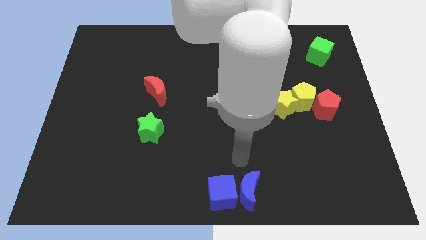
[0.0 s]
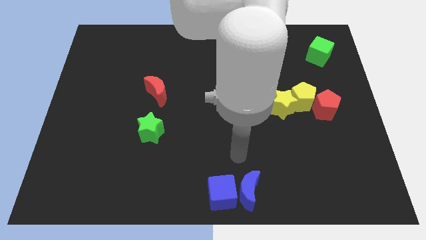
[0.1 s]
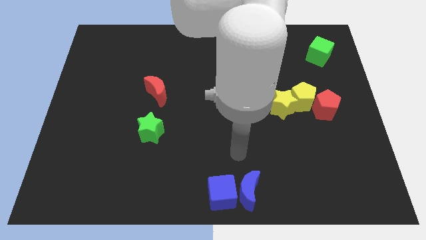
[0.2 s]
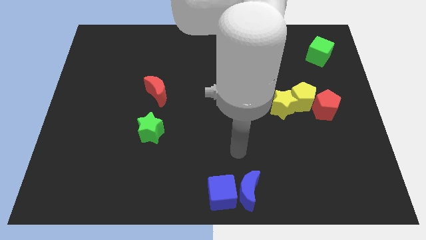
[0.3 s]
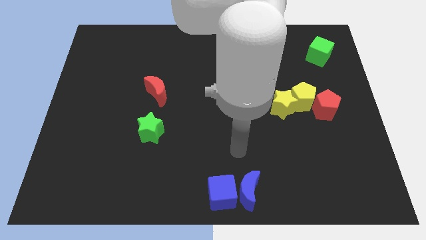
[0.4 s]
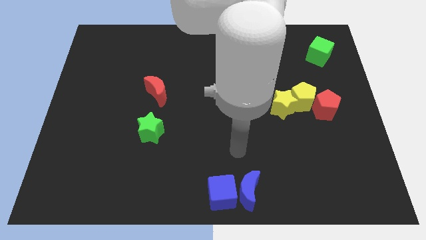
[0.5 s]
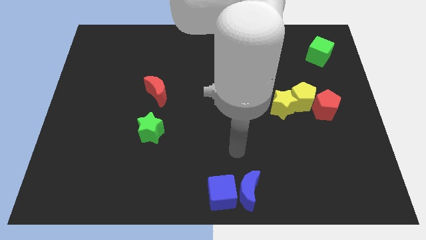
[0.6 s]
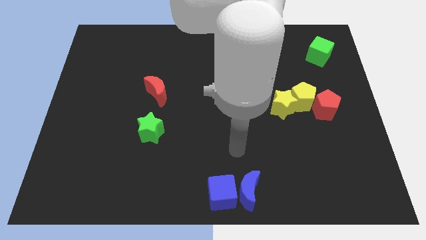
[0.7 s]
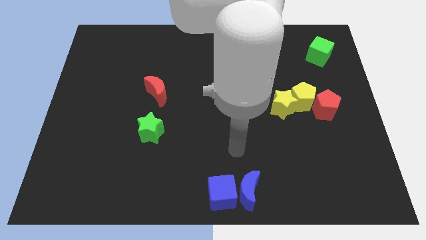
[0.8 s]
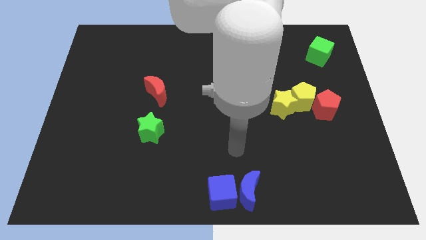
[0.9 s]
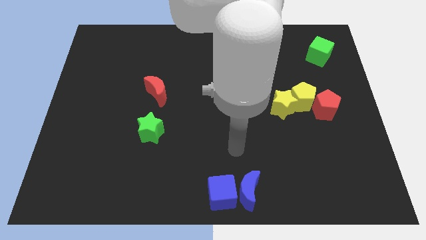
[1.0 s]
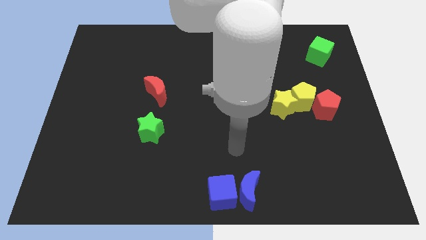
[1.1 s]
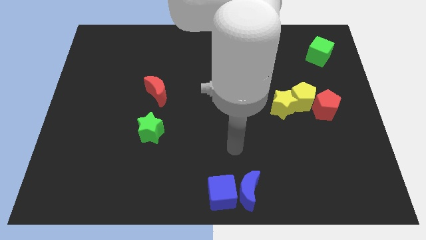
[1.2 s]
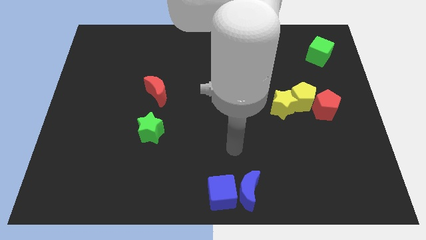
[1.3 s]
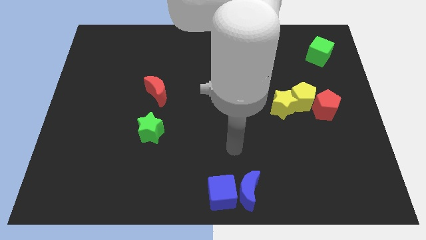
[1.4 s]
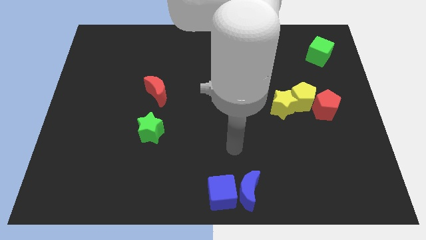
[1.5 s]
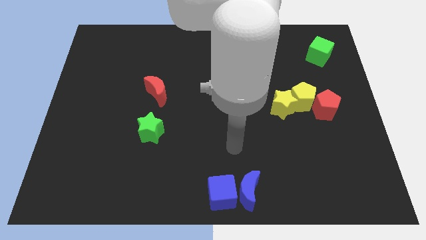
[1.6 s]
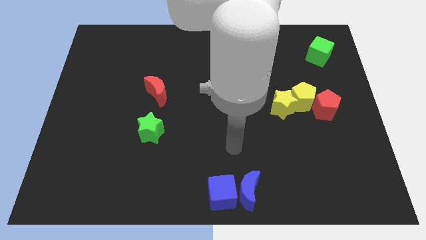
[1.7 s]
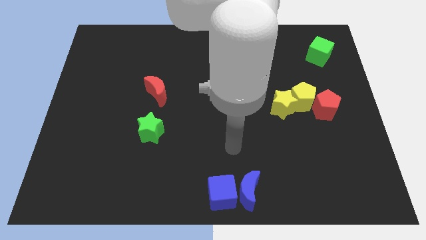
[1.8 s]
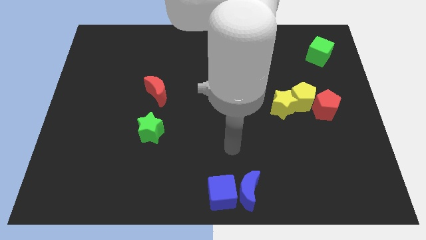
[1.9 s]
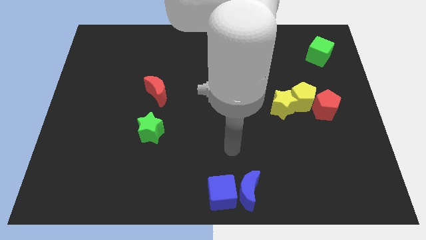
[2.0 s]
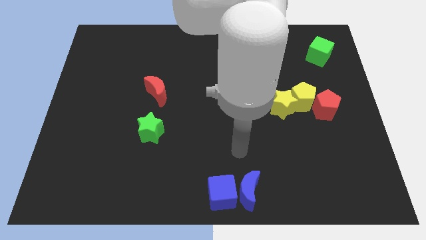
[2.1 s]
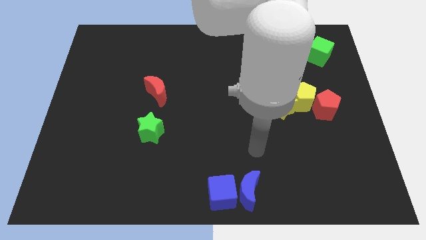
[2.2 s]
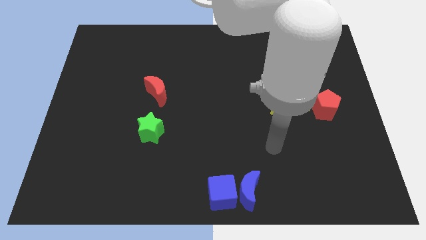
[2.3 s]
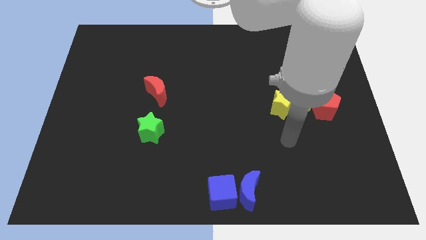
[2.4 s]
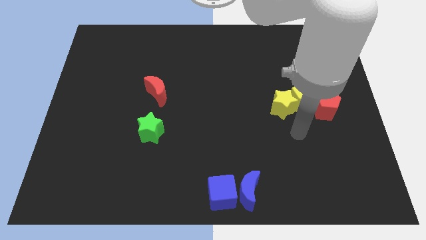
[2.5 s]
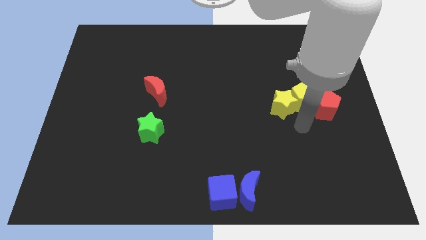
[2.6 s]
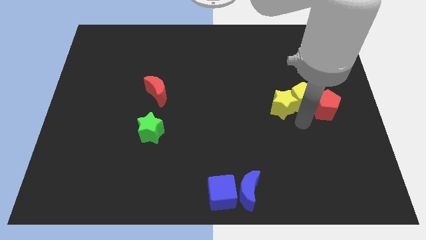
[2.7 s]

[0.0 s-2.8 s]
move your arm towards bottom of yellow pentagon

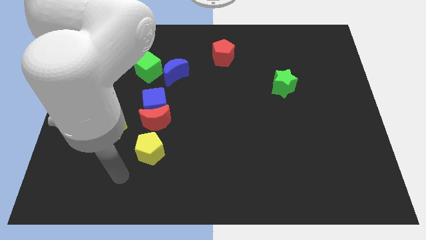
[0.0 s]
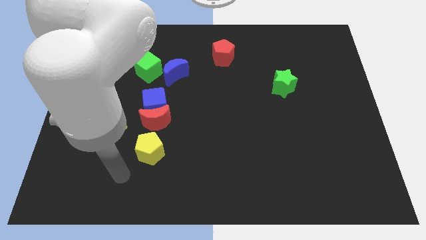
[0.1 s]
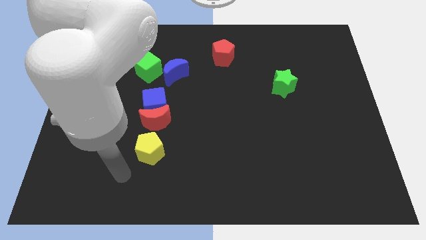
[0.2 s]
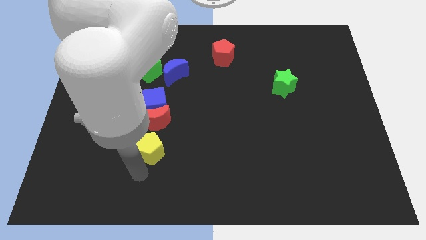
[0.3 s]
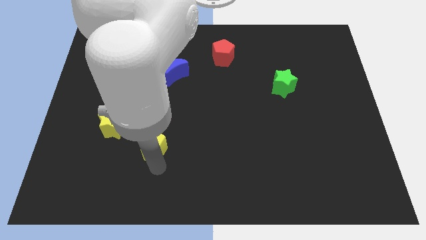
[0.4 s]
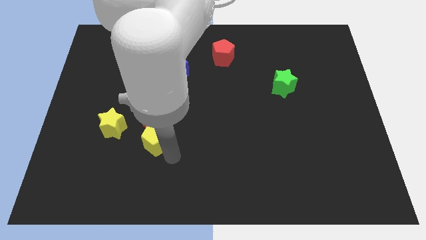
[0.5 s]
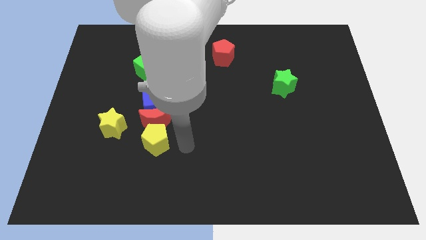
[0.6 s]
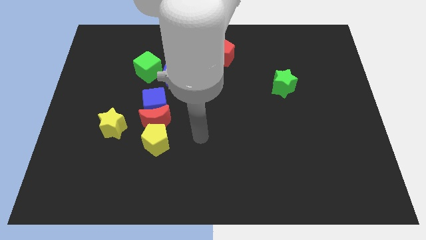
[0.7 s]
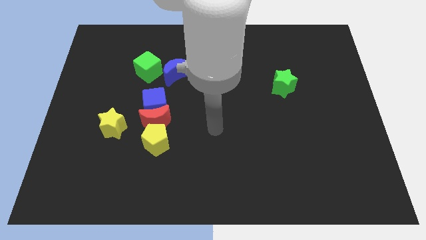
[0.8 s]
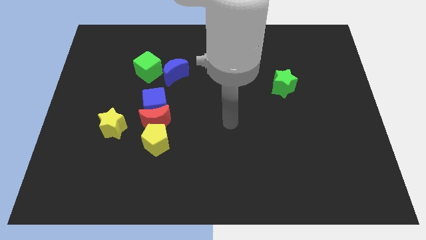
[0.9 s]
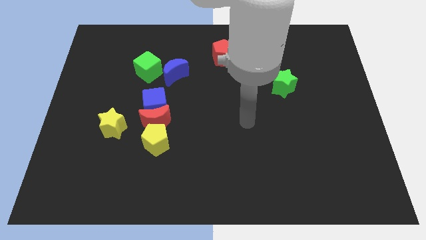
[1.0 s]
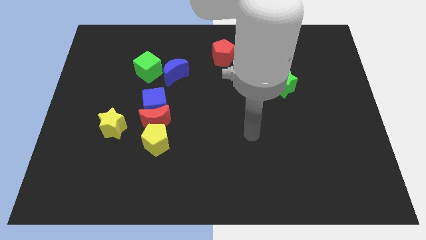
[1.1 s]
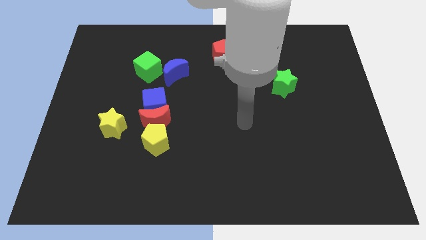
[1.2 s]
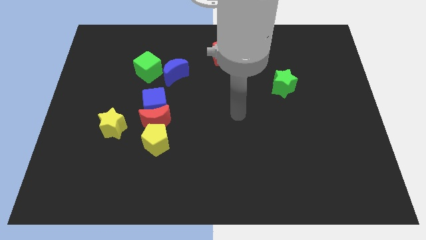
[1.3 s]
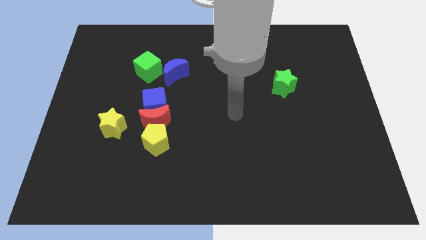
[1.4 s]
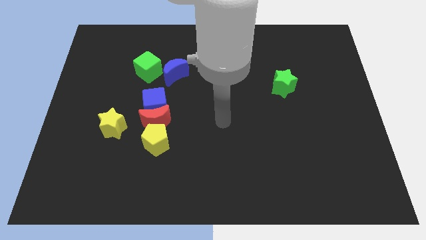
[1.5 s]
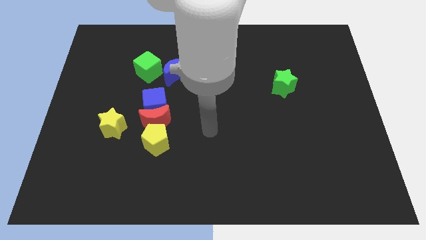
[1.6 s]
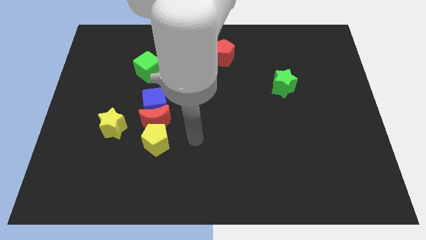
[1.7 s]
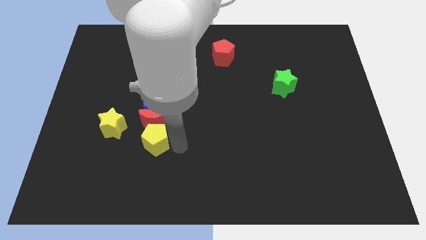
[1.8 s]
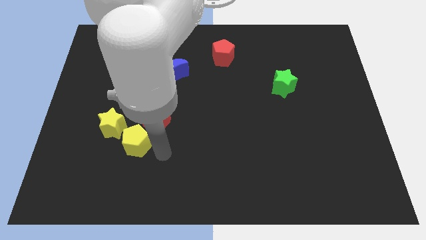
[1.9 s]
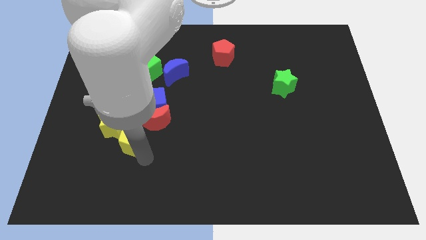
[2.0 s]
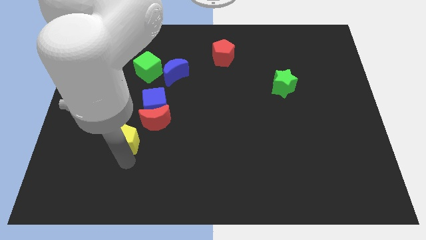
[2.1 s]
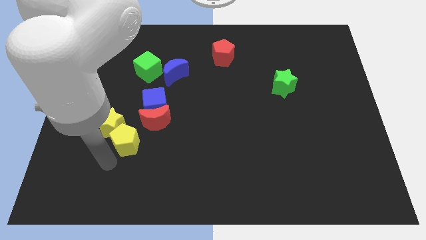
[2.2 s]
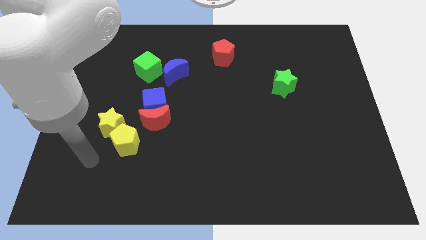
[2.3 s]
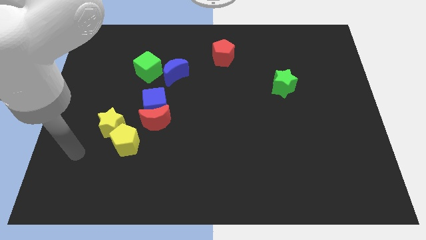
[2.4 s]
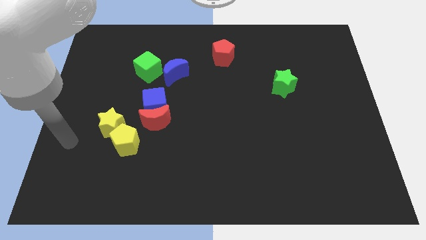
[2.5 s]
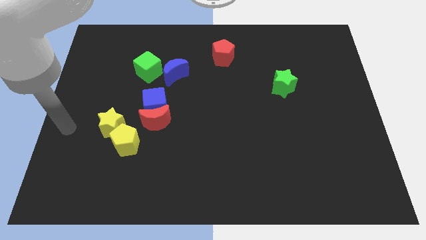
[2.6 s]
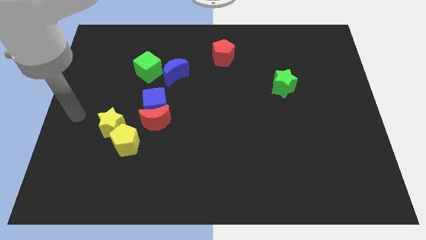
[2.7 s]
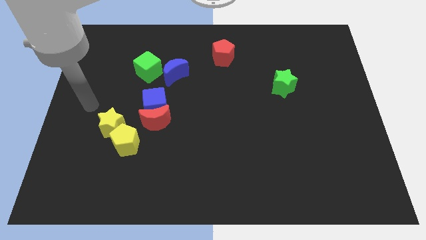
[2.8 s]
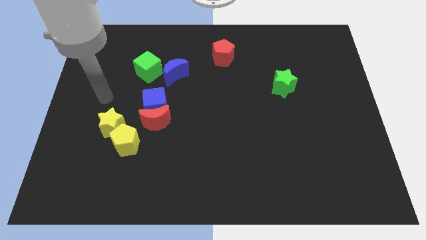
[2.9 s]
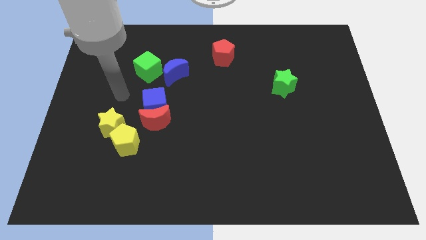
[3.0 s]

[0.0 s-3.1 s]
push the yellow pentagon into the yellow star

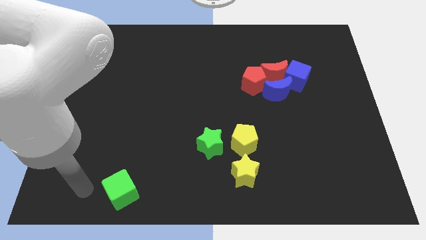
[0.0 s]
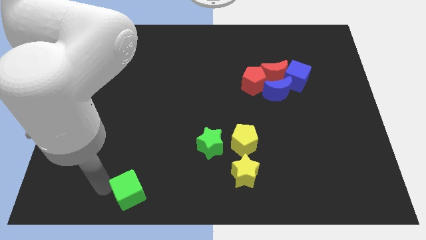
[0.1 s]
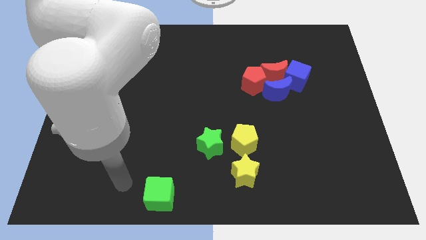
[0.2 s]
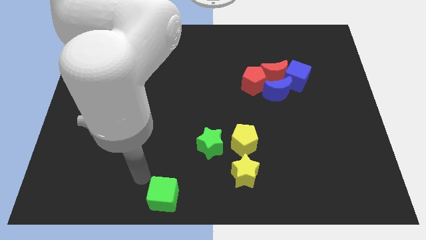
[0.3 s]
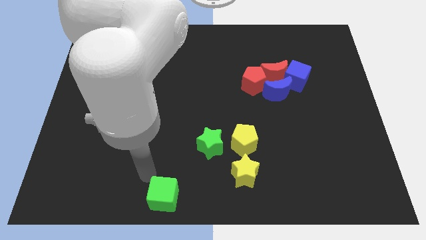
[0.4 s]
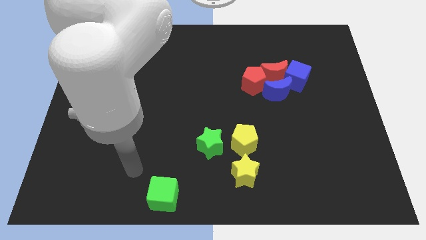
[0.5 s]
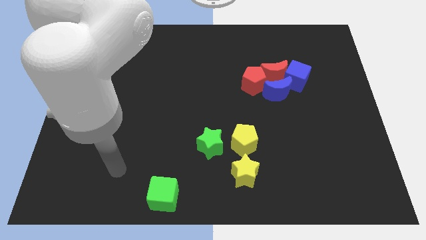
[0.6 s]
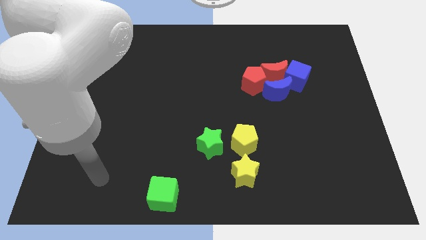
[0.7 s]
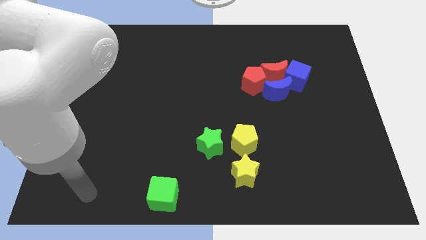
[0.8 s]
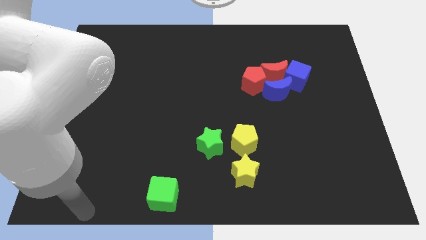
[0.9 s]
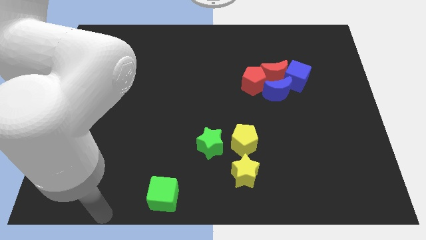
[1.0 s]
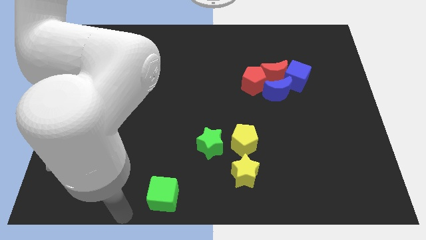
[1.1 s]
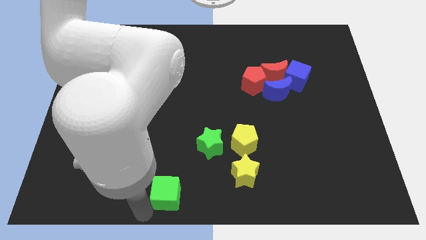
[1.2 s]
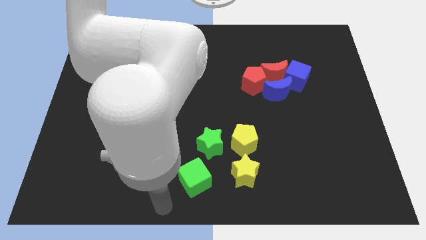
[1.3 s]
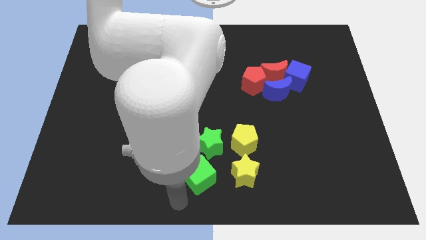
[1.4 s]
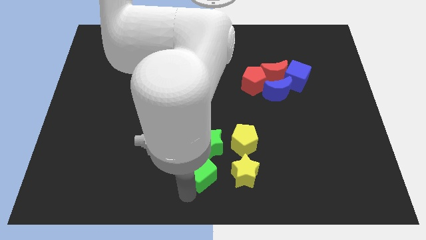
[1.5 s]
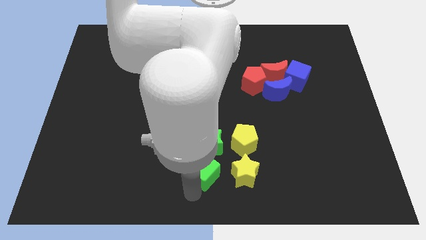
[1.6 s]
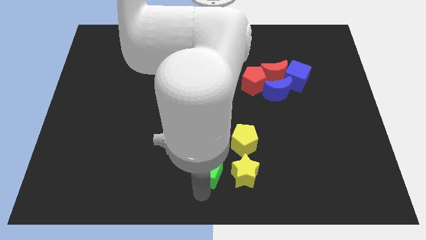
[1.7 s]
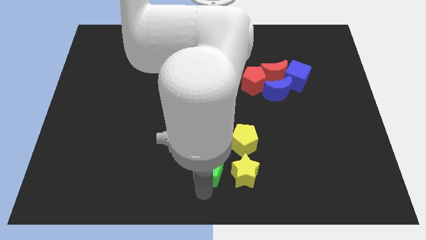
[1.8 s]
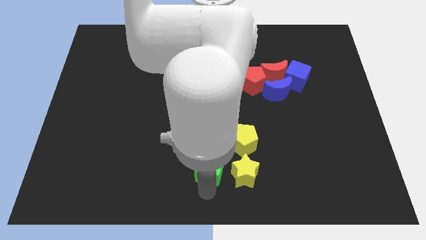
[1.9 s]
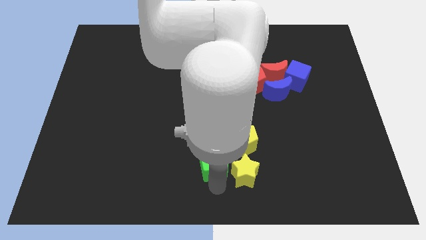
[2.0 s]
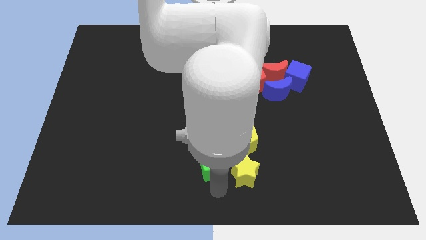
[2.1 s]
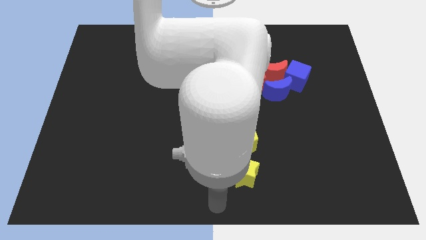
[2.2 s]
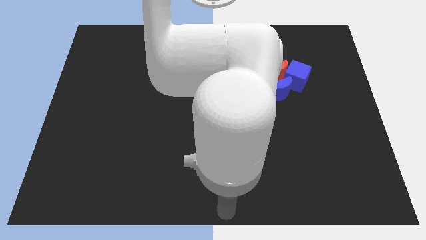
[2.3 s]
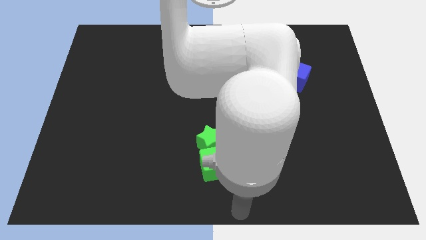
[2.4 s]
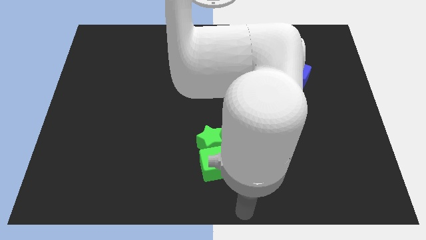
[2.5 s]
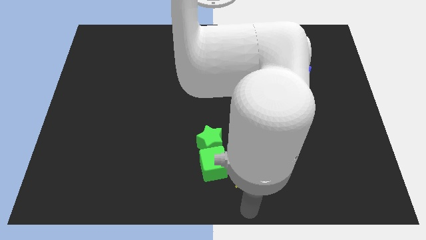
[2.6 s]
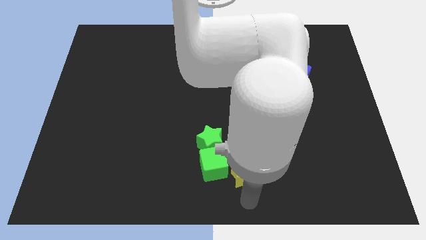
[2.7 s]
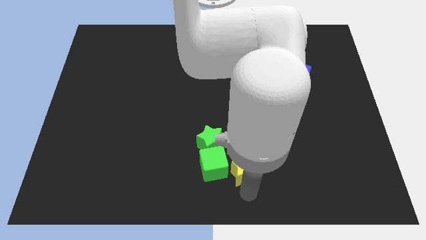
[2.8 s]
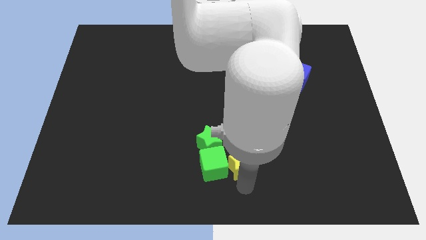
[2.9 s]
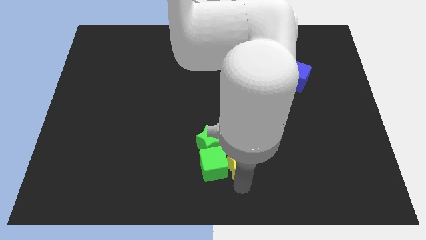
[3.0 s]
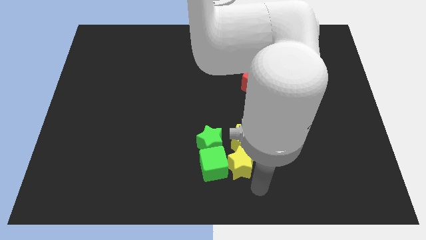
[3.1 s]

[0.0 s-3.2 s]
move green cube down to the green star
